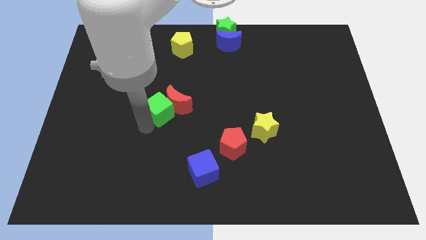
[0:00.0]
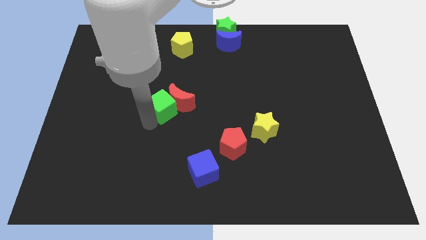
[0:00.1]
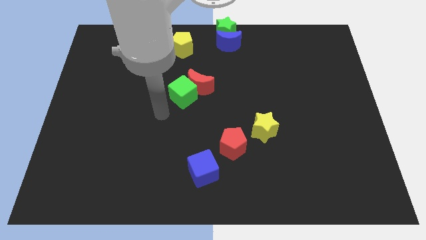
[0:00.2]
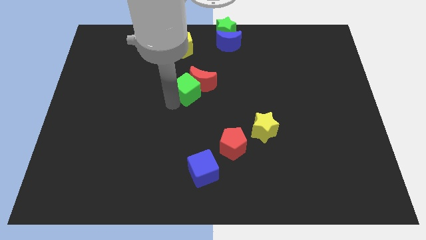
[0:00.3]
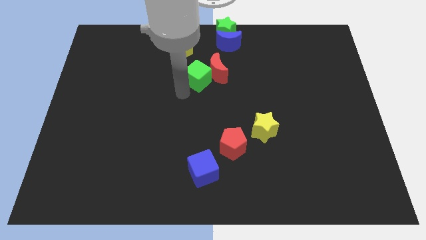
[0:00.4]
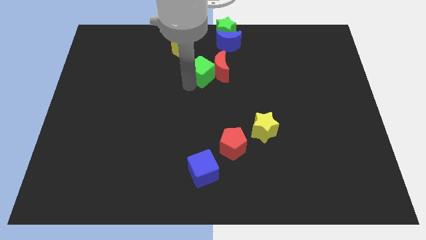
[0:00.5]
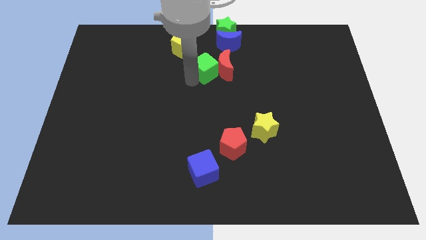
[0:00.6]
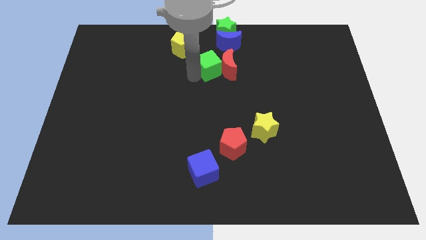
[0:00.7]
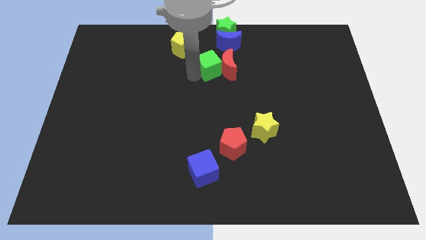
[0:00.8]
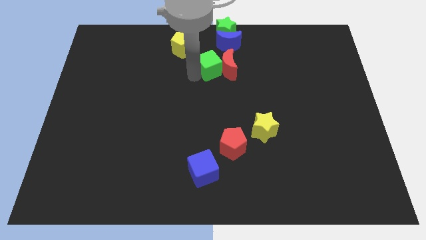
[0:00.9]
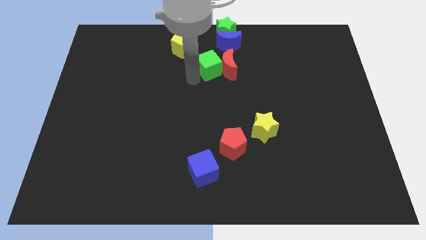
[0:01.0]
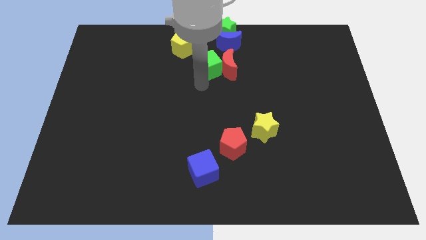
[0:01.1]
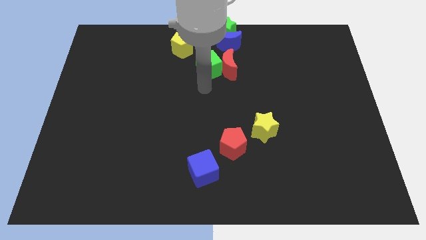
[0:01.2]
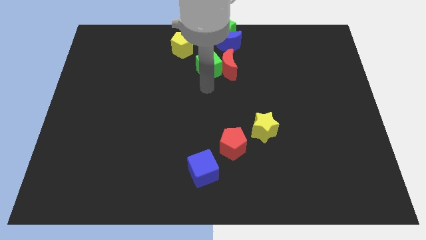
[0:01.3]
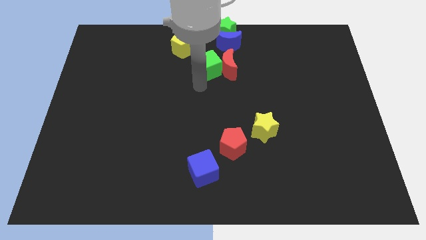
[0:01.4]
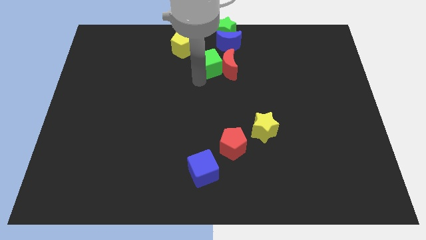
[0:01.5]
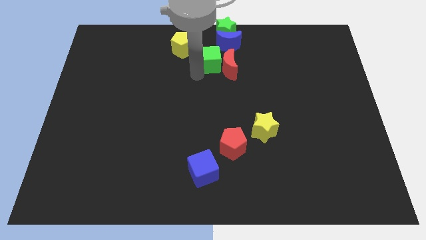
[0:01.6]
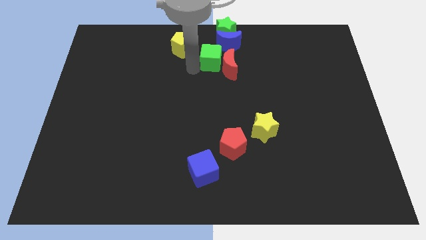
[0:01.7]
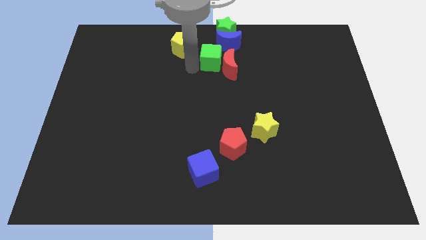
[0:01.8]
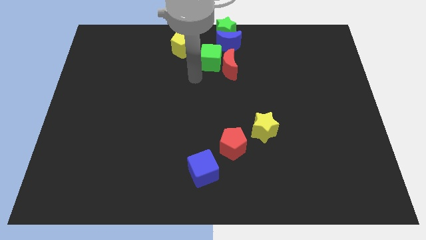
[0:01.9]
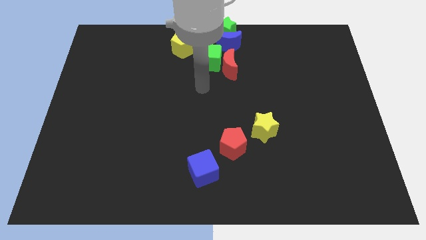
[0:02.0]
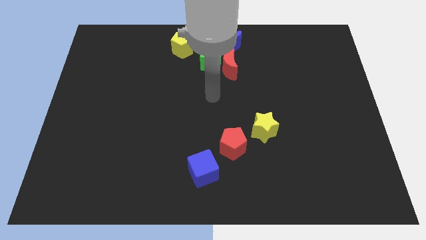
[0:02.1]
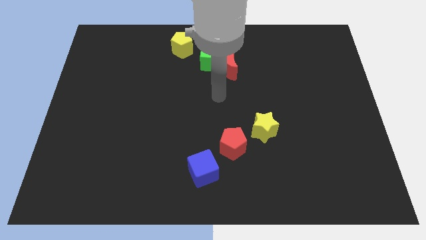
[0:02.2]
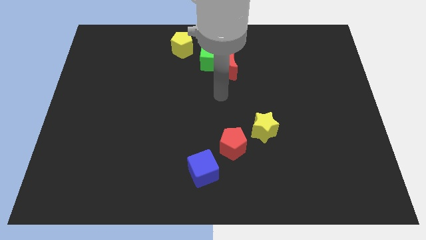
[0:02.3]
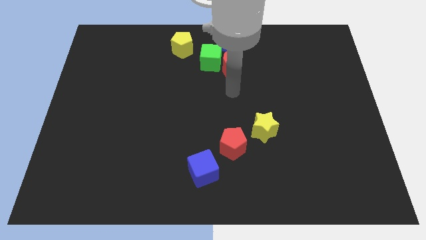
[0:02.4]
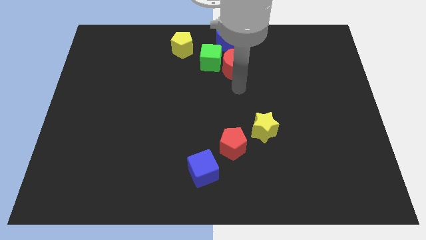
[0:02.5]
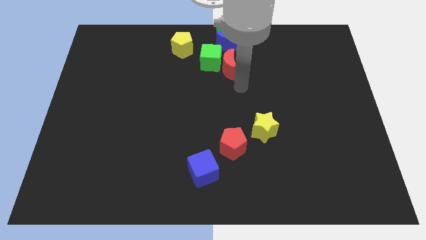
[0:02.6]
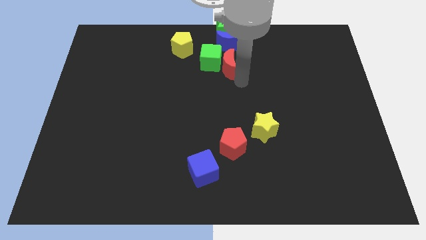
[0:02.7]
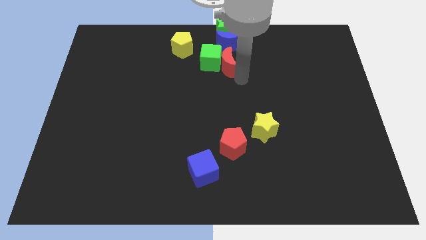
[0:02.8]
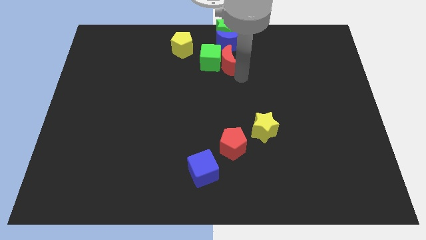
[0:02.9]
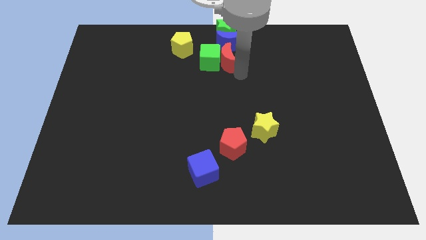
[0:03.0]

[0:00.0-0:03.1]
slide green cube along with the red crescent to the top center

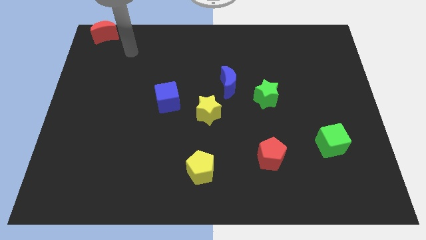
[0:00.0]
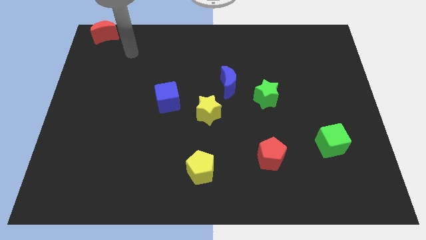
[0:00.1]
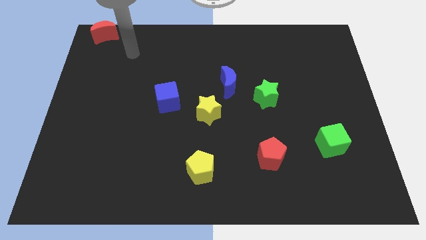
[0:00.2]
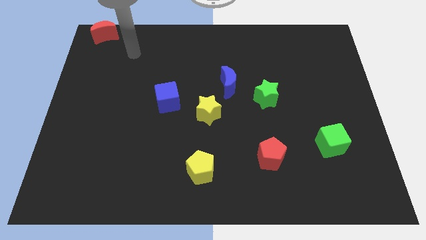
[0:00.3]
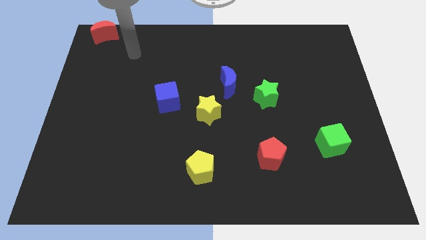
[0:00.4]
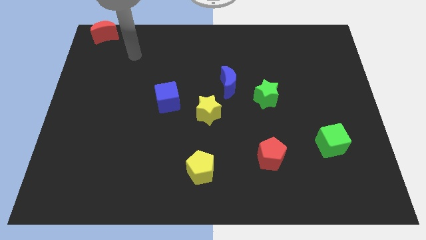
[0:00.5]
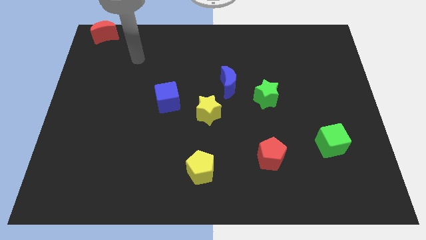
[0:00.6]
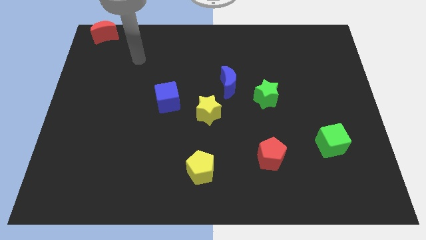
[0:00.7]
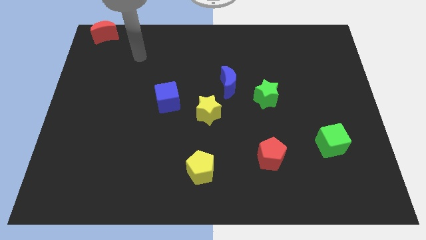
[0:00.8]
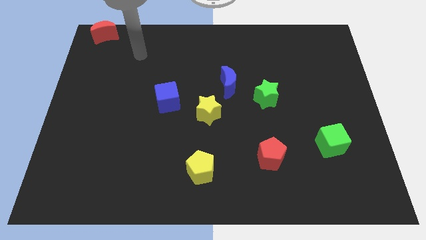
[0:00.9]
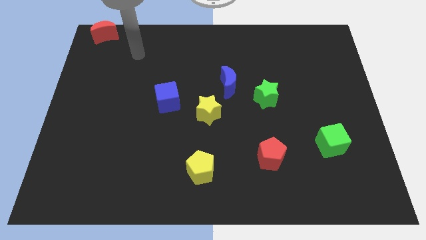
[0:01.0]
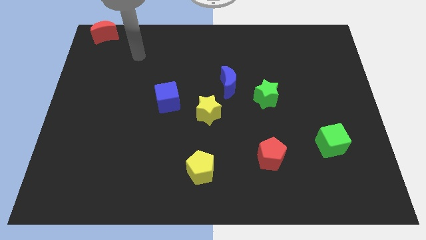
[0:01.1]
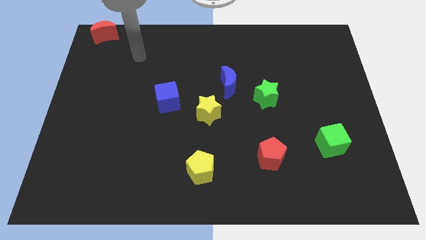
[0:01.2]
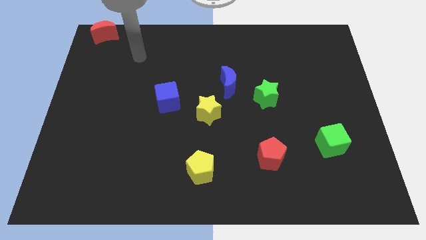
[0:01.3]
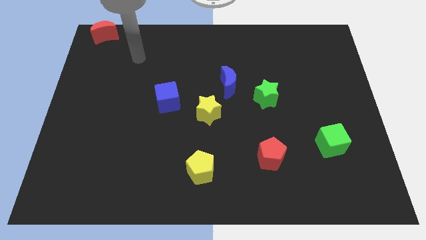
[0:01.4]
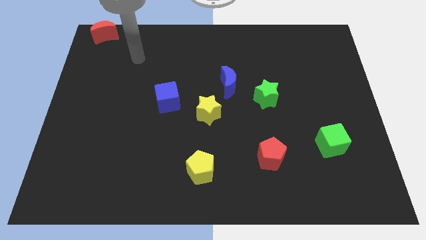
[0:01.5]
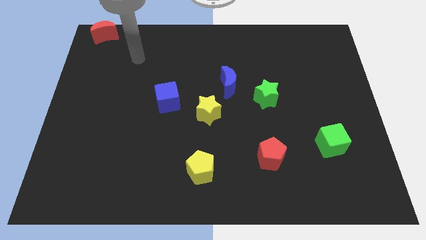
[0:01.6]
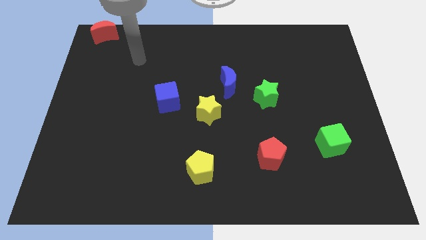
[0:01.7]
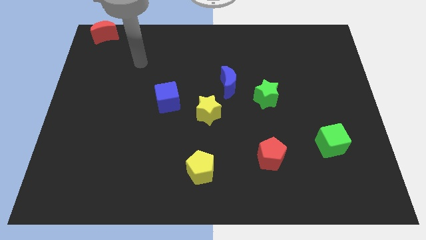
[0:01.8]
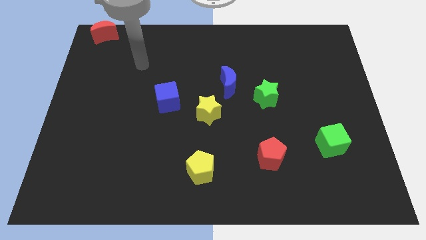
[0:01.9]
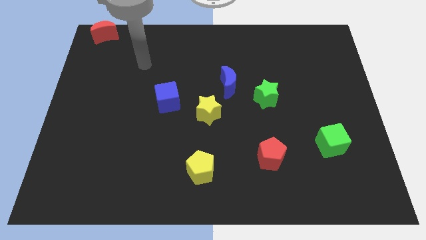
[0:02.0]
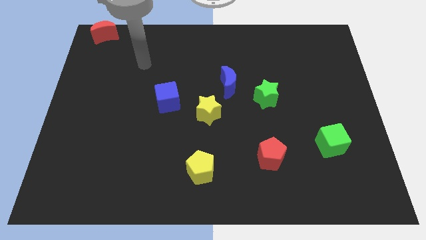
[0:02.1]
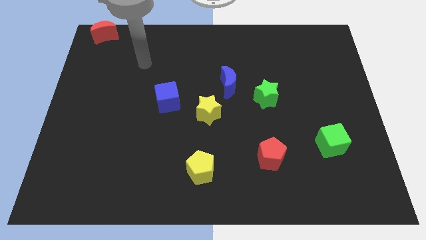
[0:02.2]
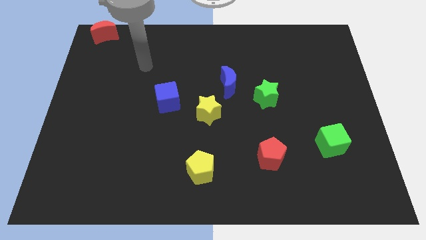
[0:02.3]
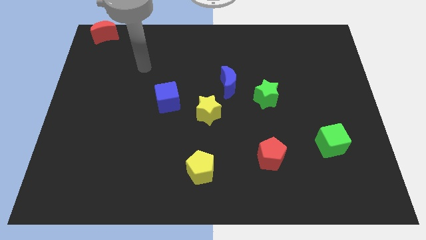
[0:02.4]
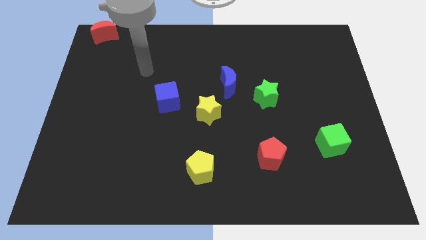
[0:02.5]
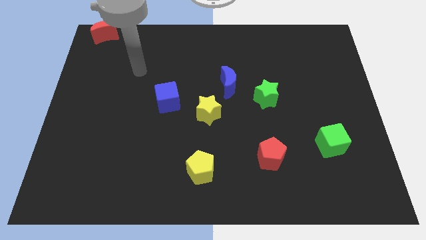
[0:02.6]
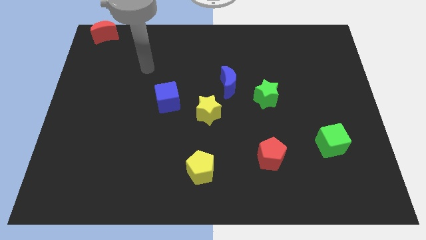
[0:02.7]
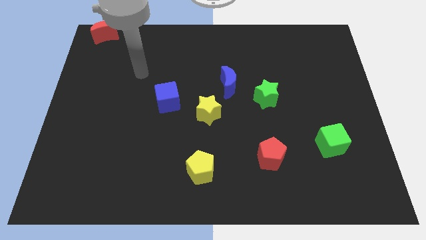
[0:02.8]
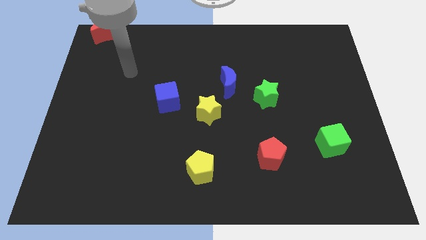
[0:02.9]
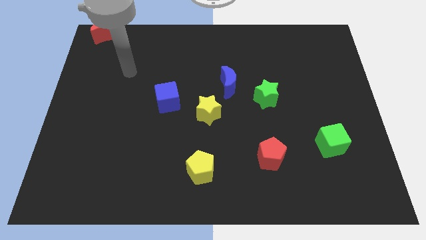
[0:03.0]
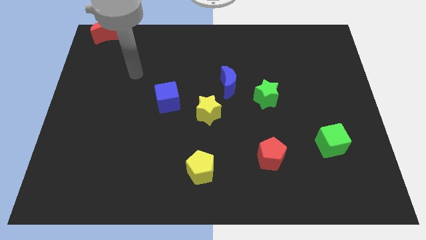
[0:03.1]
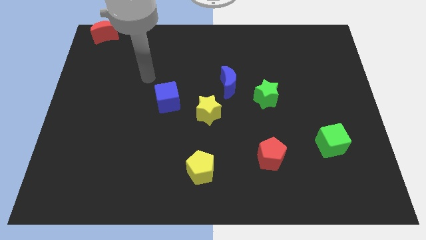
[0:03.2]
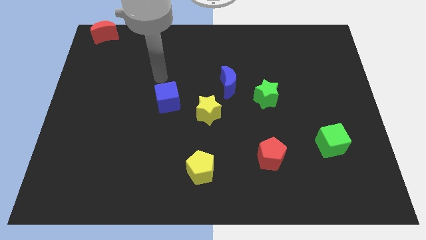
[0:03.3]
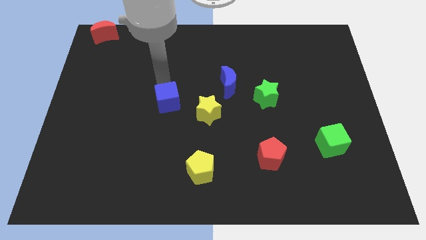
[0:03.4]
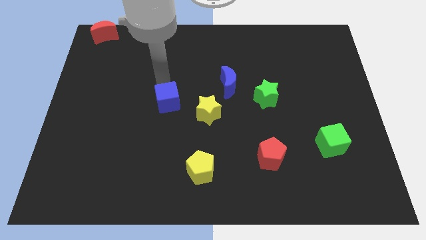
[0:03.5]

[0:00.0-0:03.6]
point your arm at the top of the blue cube

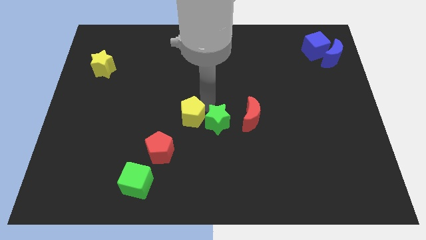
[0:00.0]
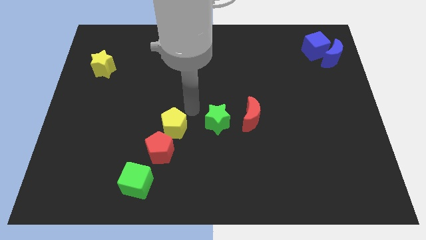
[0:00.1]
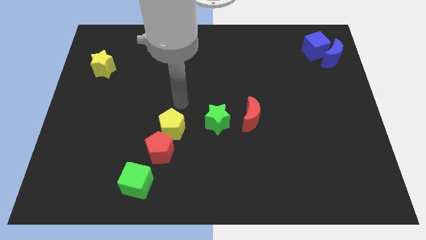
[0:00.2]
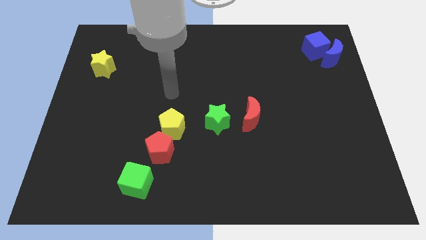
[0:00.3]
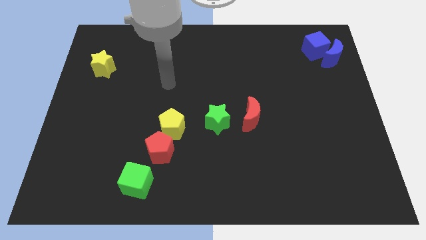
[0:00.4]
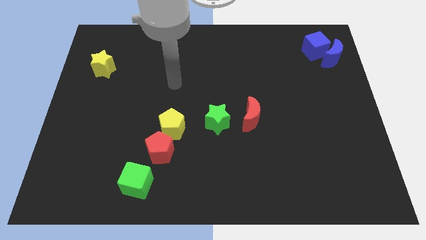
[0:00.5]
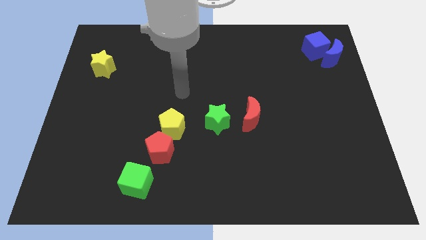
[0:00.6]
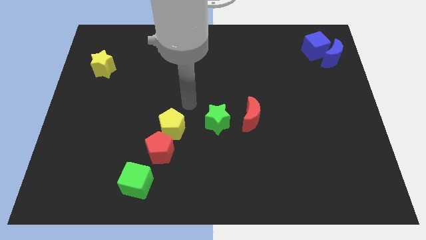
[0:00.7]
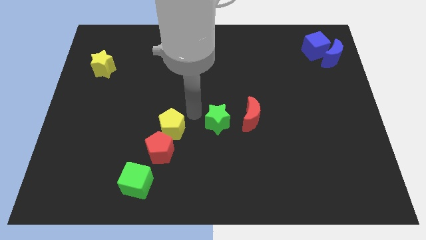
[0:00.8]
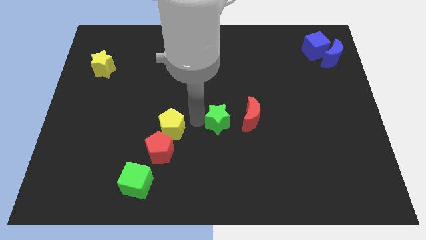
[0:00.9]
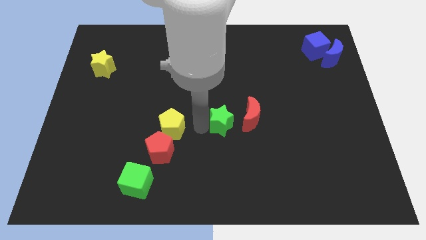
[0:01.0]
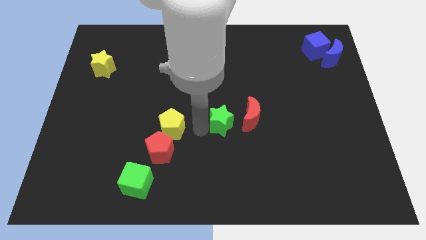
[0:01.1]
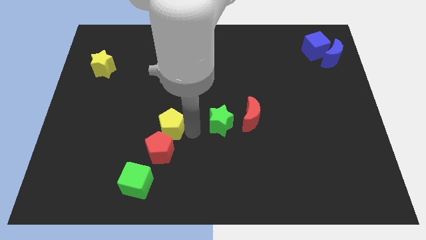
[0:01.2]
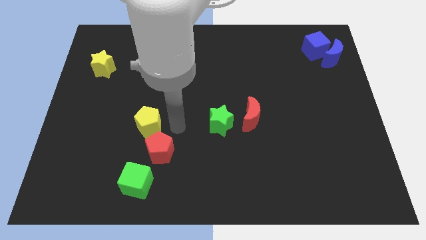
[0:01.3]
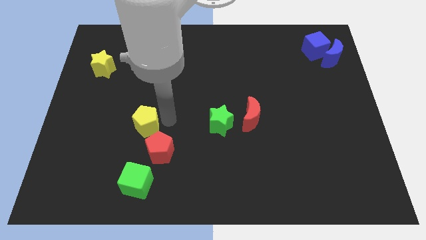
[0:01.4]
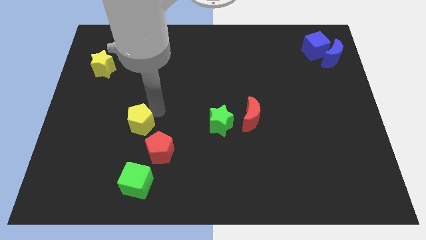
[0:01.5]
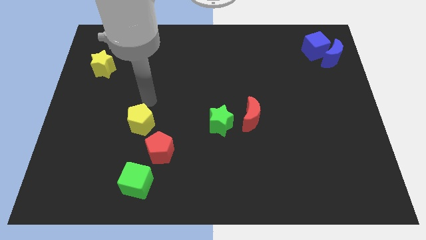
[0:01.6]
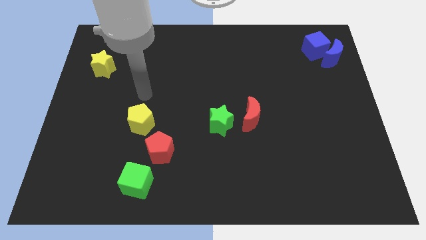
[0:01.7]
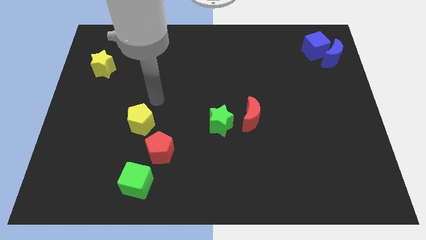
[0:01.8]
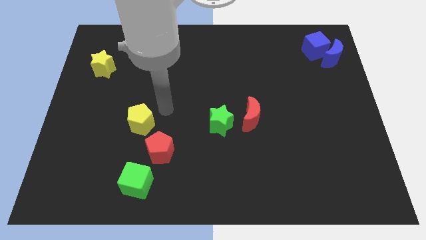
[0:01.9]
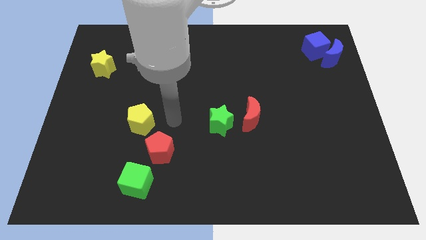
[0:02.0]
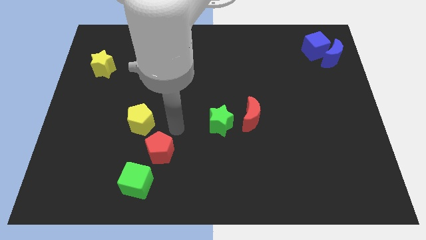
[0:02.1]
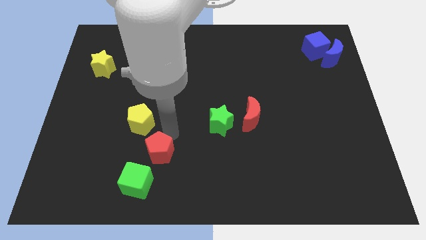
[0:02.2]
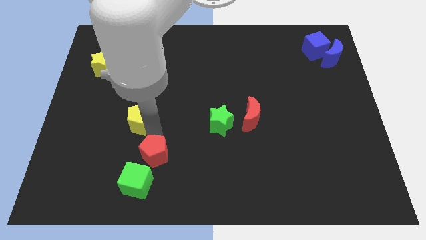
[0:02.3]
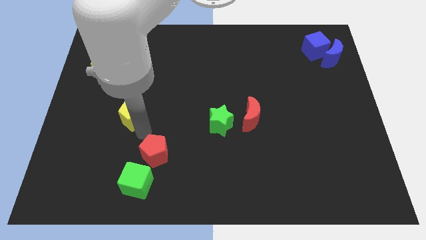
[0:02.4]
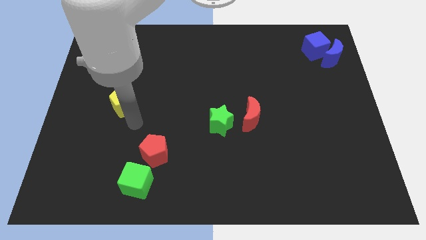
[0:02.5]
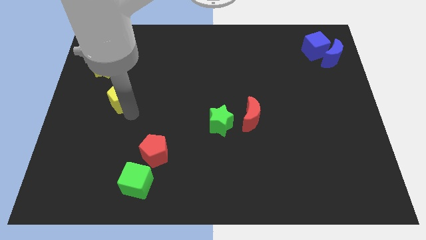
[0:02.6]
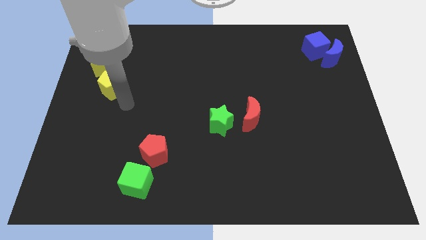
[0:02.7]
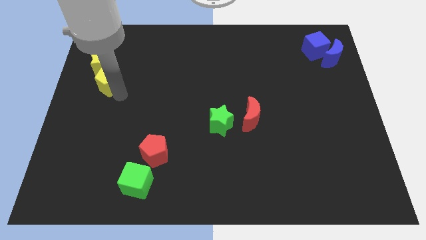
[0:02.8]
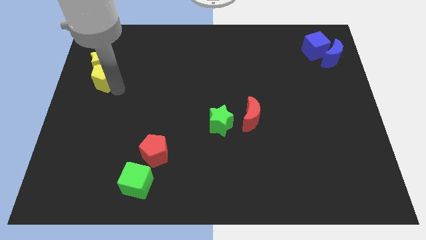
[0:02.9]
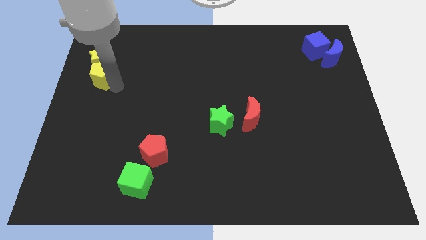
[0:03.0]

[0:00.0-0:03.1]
separate yellow pentagon from red pentagon
